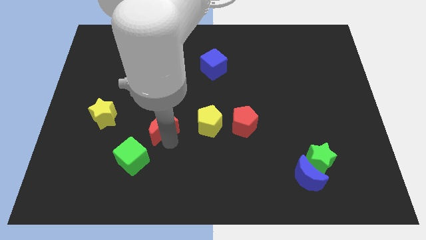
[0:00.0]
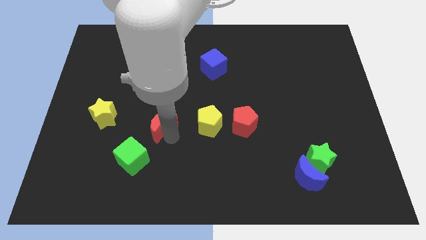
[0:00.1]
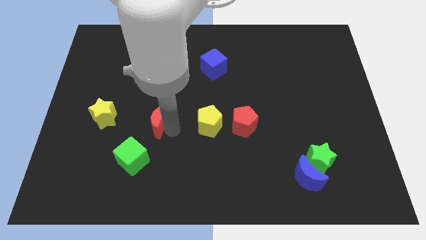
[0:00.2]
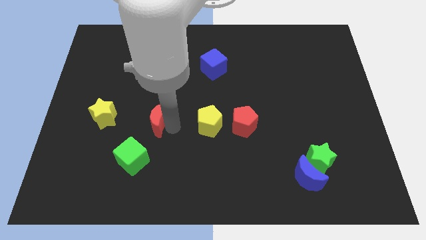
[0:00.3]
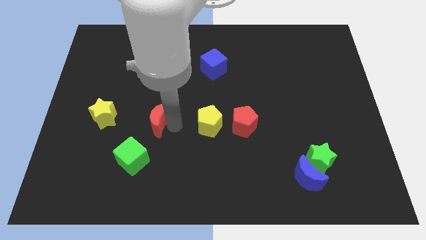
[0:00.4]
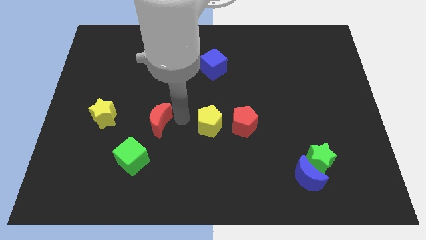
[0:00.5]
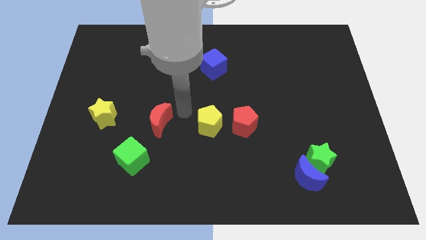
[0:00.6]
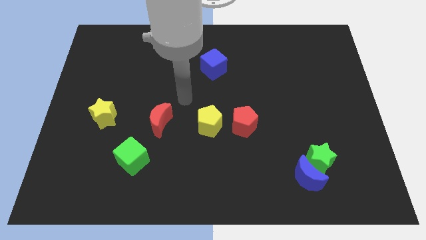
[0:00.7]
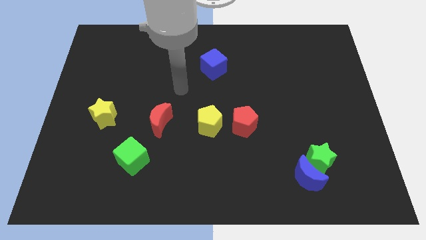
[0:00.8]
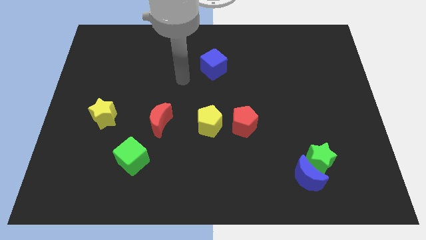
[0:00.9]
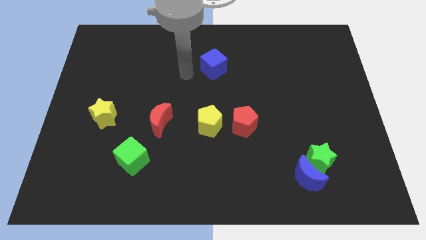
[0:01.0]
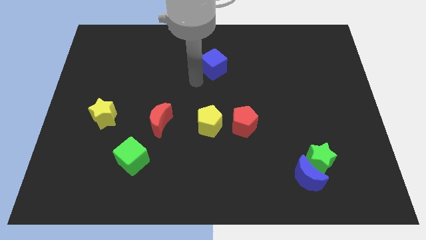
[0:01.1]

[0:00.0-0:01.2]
move the red moon slightly to the top

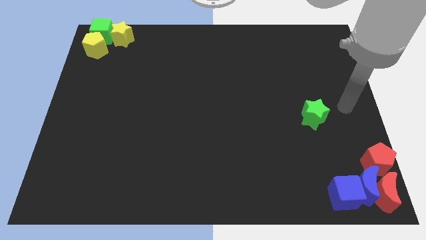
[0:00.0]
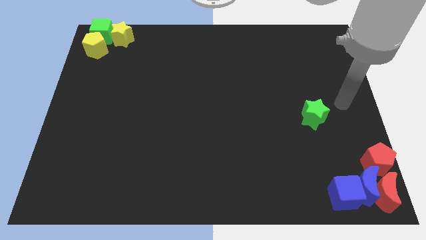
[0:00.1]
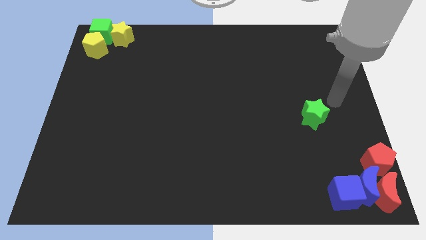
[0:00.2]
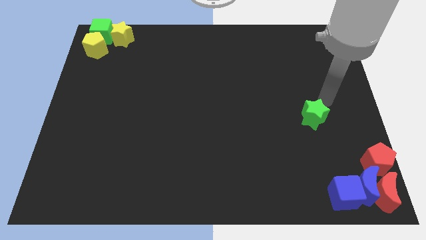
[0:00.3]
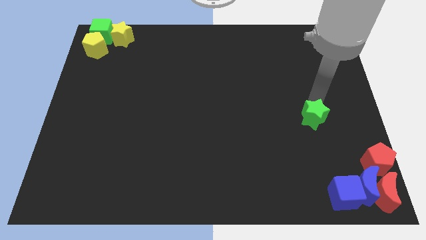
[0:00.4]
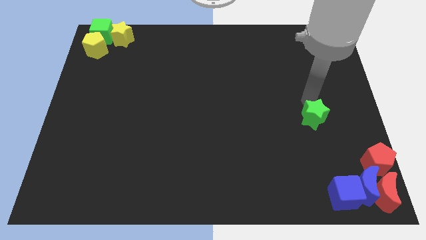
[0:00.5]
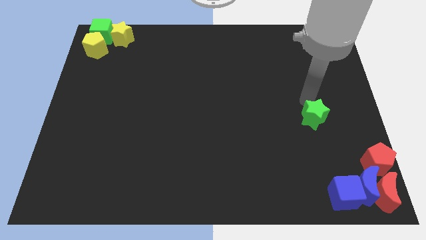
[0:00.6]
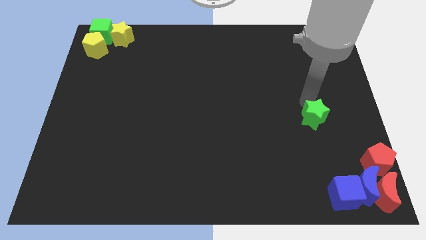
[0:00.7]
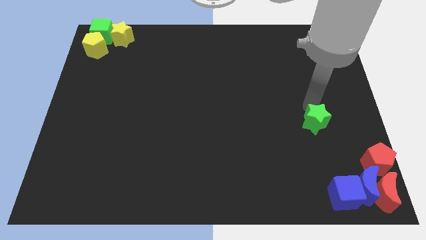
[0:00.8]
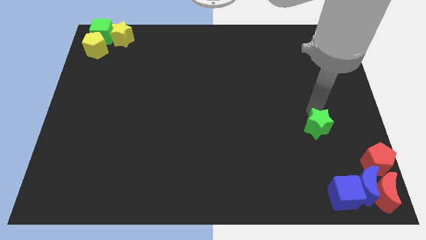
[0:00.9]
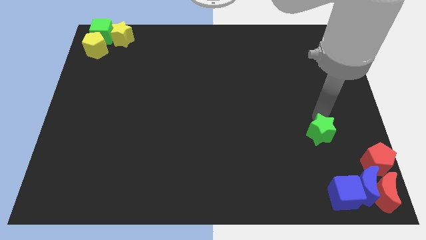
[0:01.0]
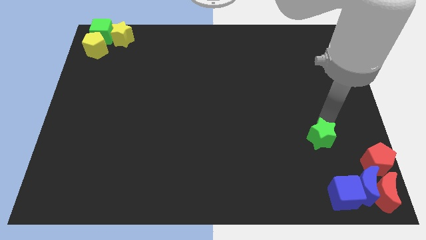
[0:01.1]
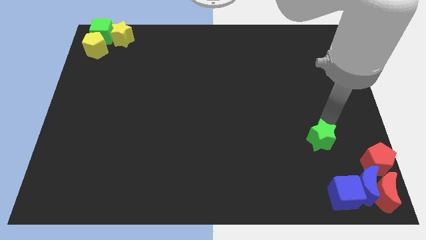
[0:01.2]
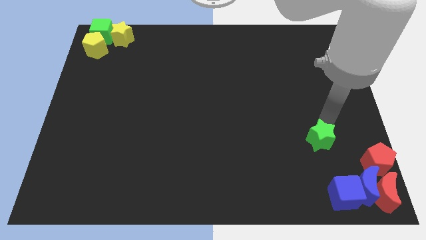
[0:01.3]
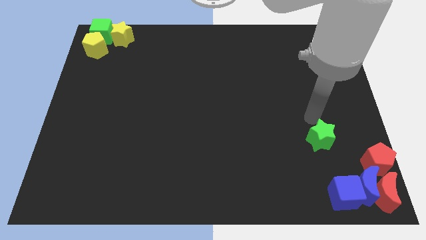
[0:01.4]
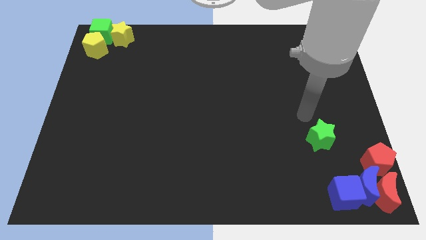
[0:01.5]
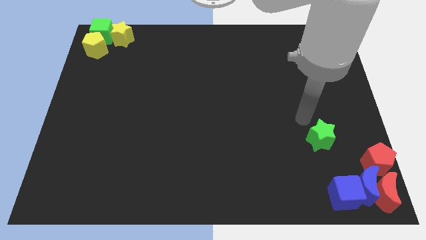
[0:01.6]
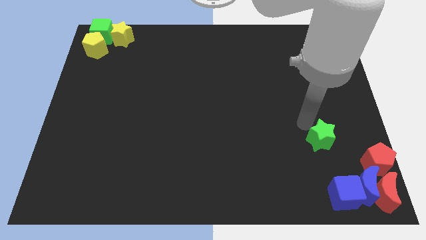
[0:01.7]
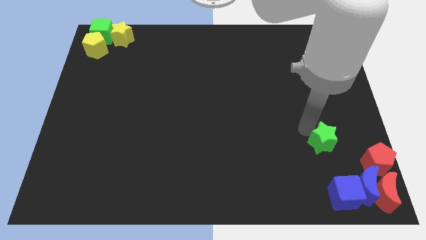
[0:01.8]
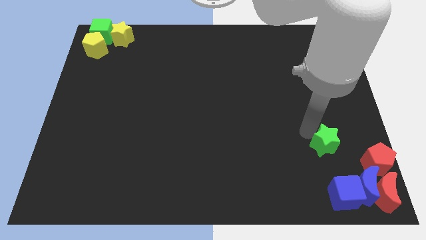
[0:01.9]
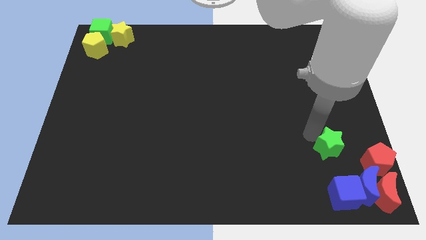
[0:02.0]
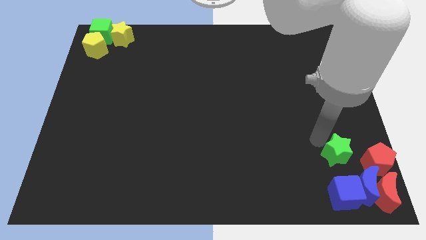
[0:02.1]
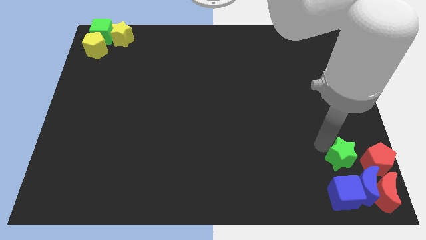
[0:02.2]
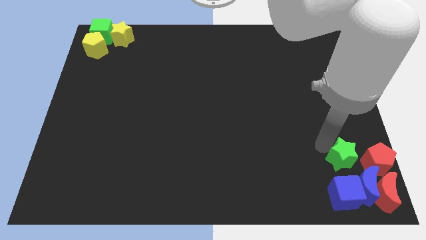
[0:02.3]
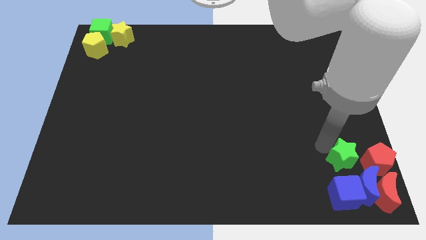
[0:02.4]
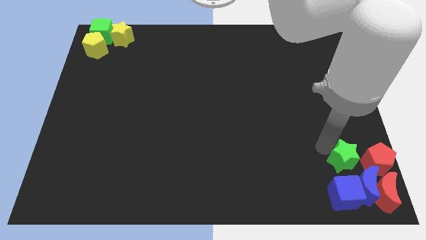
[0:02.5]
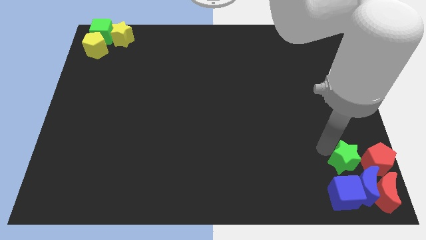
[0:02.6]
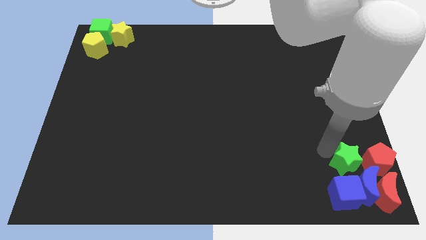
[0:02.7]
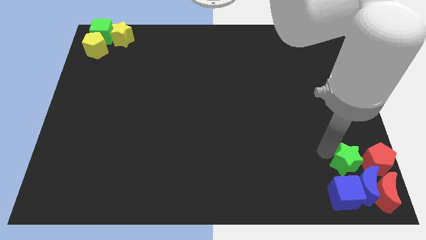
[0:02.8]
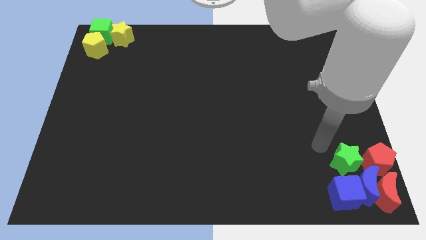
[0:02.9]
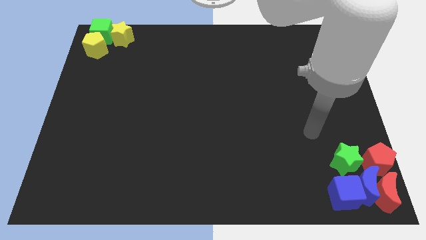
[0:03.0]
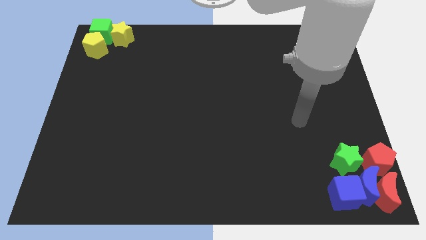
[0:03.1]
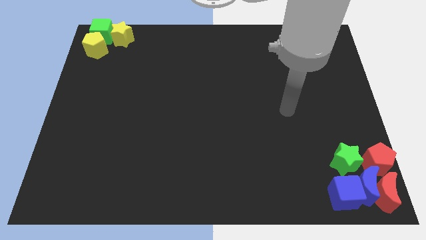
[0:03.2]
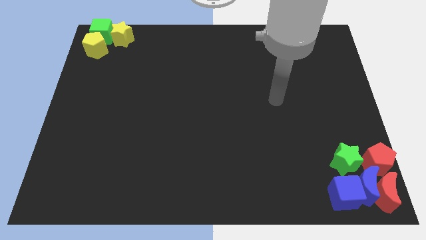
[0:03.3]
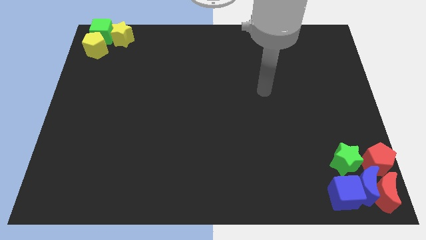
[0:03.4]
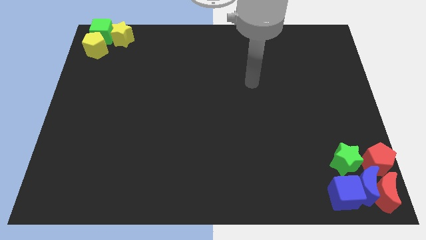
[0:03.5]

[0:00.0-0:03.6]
place green star above blue cube

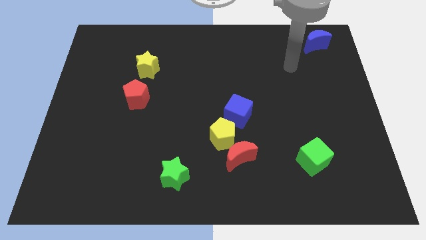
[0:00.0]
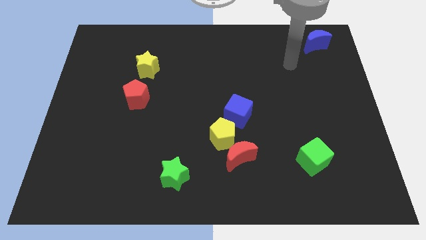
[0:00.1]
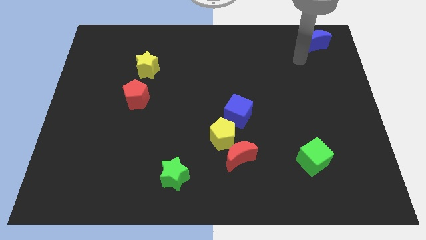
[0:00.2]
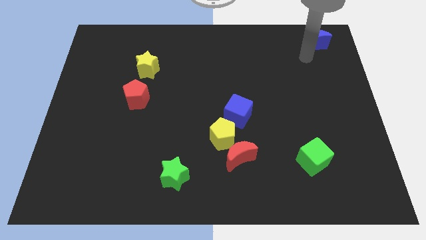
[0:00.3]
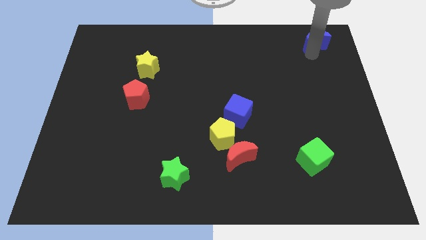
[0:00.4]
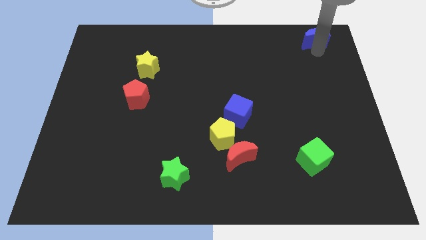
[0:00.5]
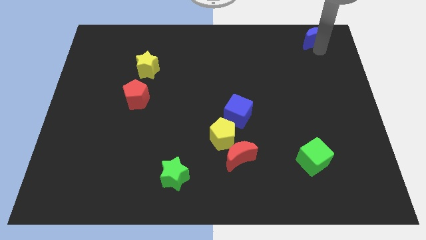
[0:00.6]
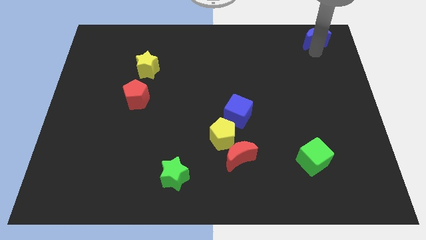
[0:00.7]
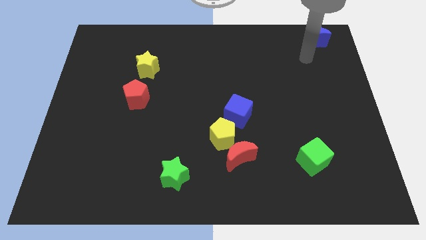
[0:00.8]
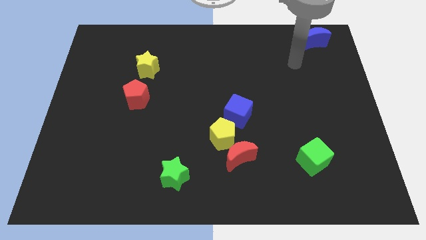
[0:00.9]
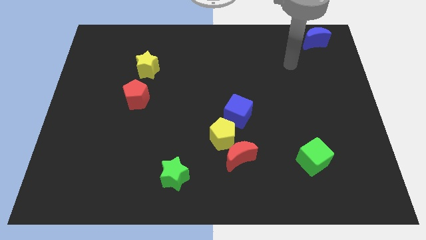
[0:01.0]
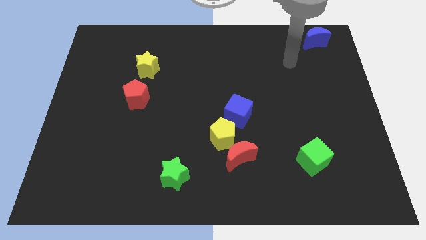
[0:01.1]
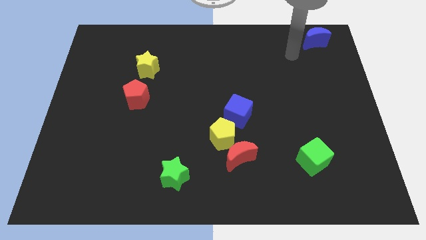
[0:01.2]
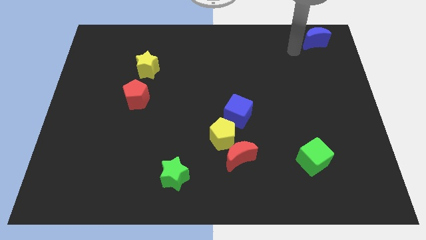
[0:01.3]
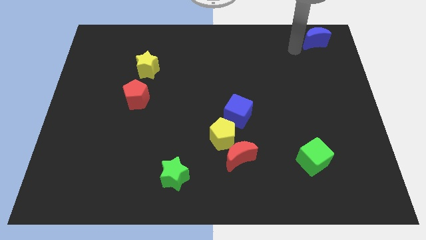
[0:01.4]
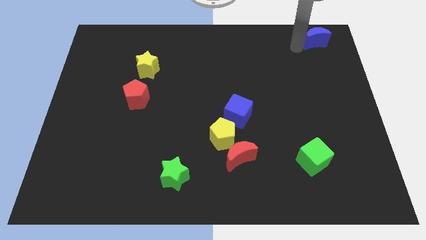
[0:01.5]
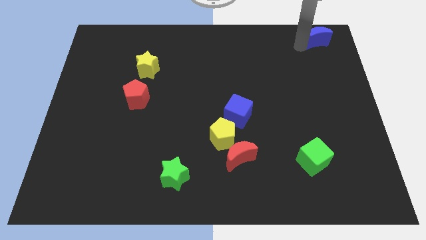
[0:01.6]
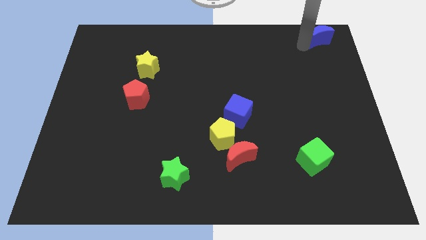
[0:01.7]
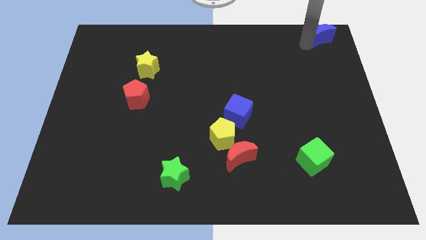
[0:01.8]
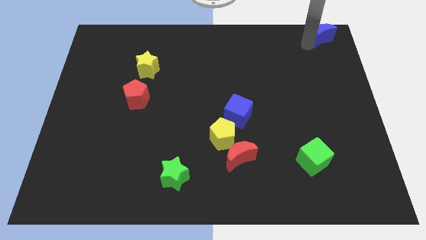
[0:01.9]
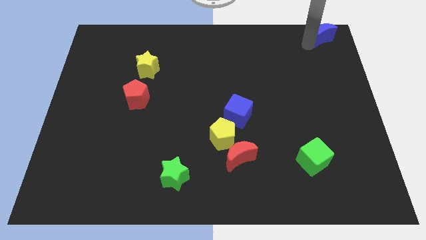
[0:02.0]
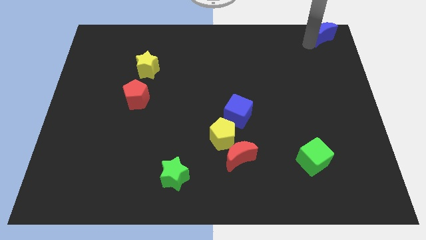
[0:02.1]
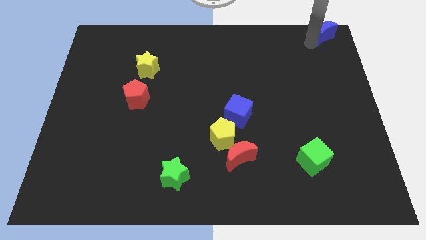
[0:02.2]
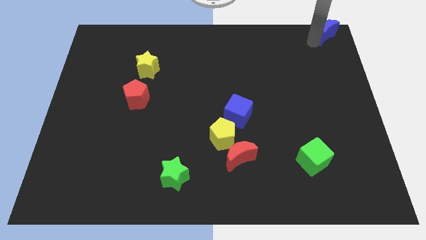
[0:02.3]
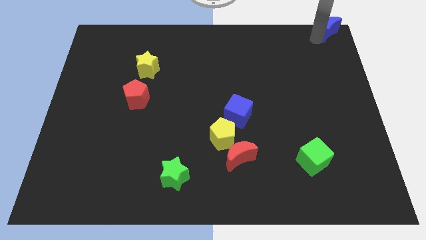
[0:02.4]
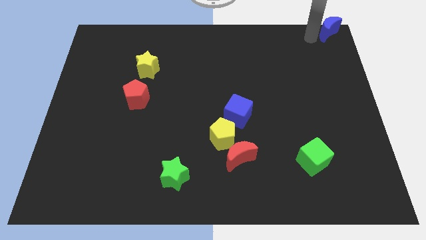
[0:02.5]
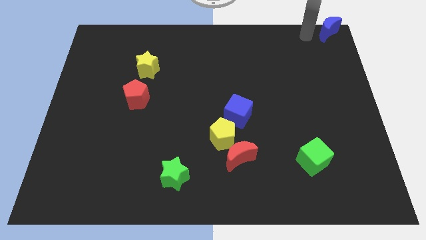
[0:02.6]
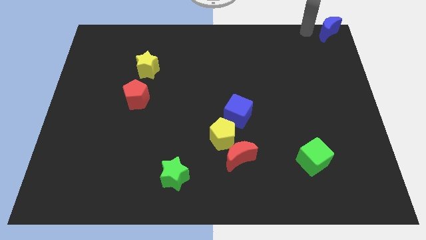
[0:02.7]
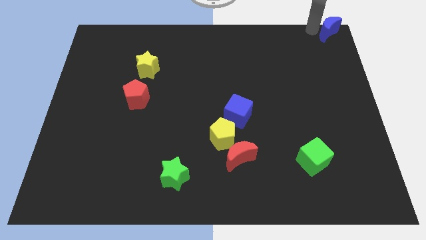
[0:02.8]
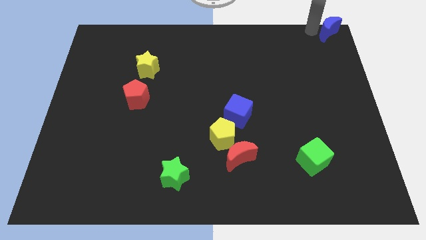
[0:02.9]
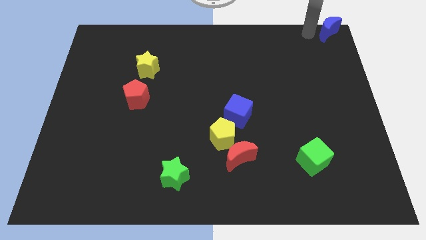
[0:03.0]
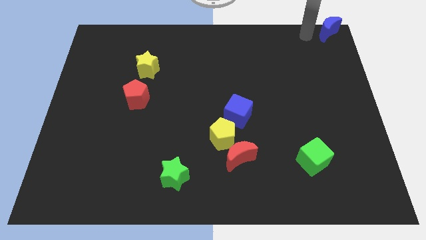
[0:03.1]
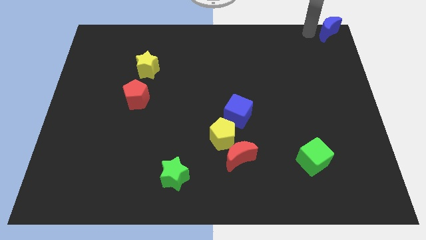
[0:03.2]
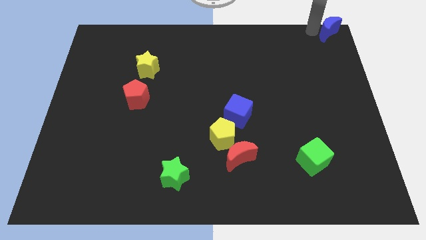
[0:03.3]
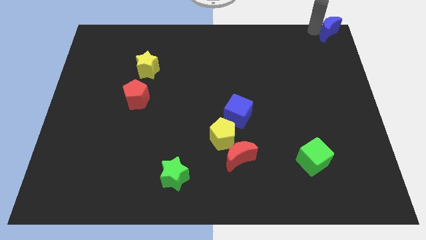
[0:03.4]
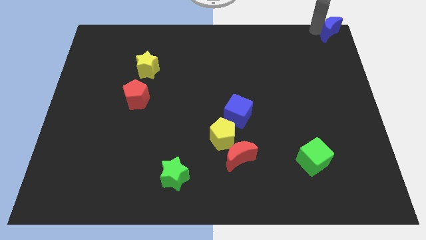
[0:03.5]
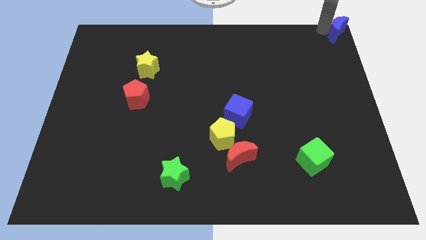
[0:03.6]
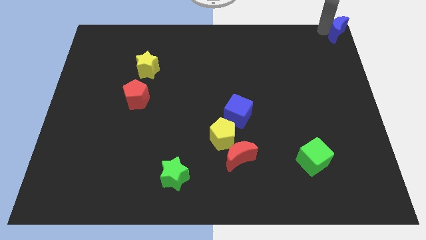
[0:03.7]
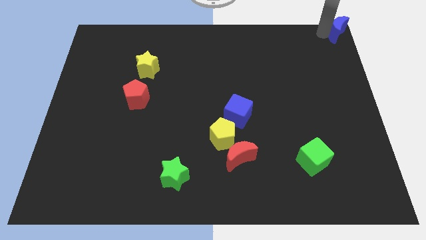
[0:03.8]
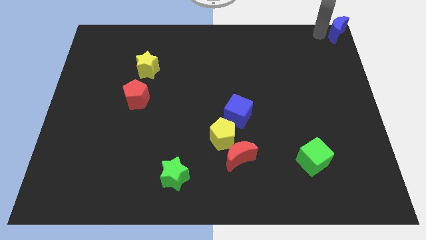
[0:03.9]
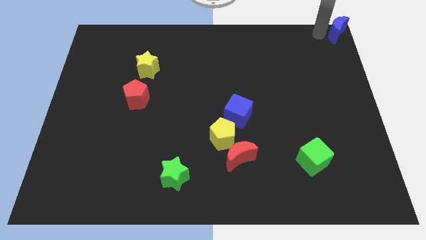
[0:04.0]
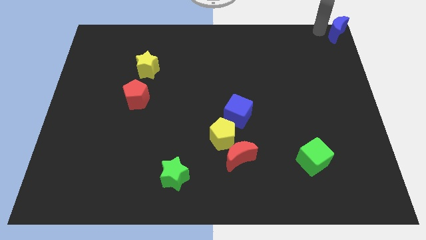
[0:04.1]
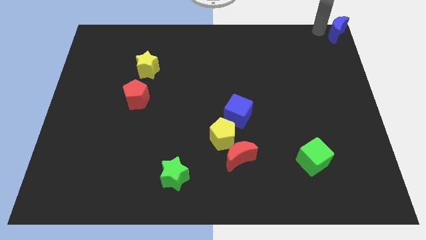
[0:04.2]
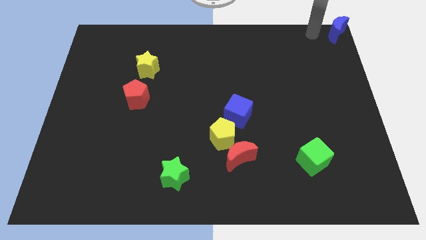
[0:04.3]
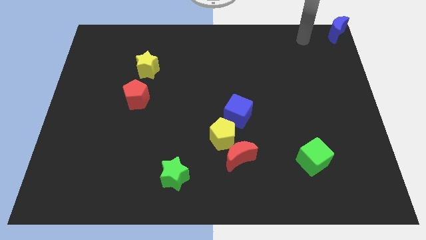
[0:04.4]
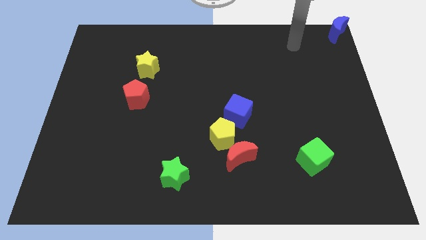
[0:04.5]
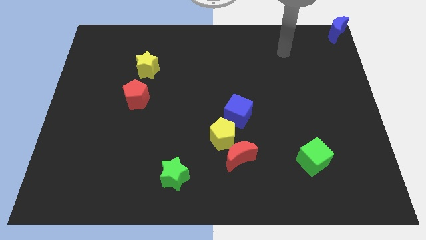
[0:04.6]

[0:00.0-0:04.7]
place the blue crescent to the top right corner of the board
